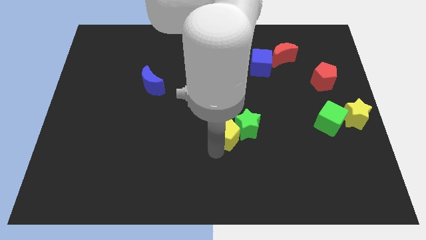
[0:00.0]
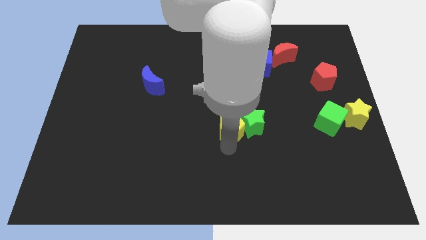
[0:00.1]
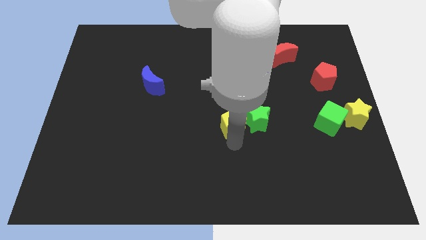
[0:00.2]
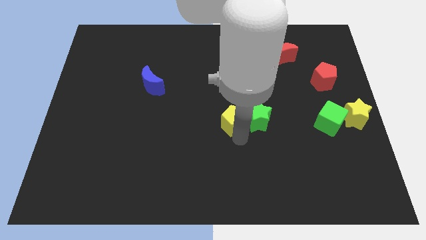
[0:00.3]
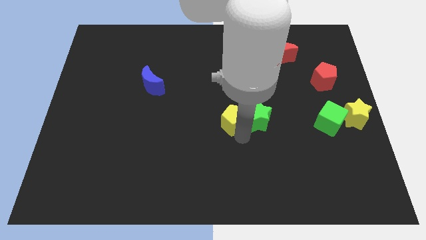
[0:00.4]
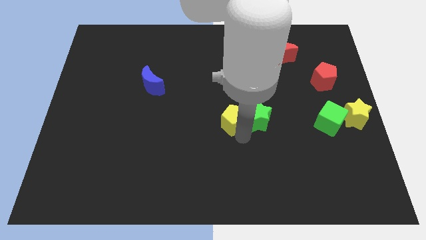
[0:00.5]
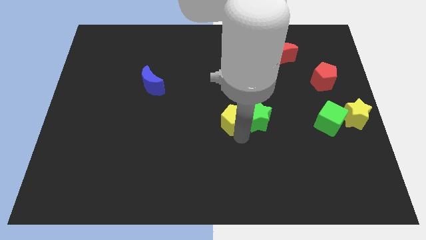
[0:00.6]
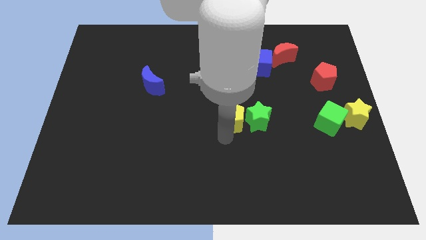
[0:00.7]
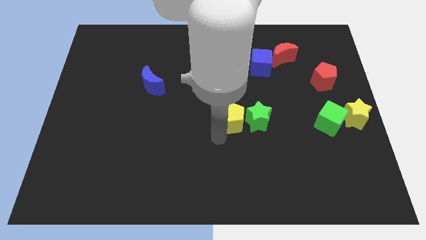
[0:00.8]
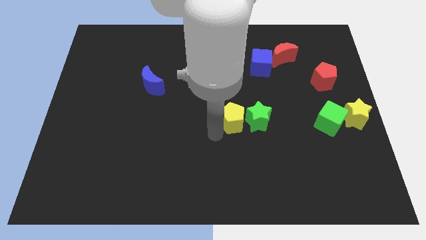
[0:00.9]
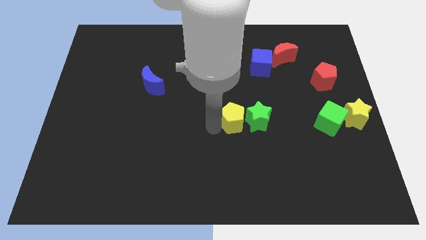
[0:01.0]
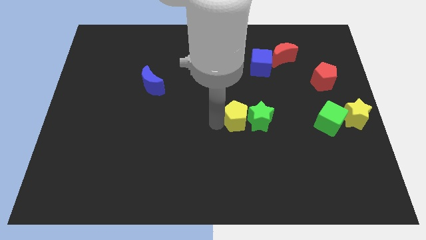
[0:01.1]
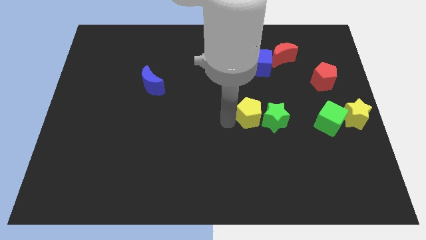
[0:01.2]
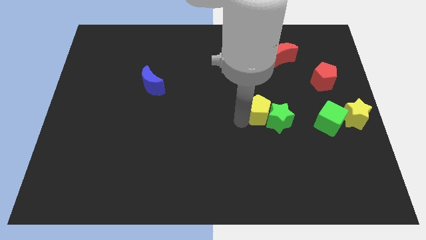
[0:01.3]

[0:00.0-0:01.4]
place the yellow pentagon and green star below the blue cube

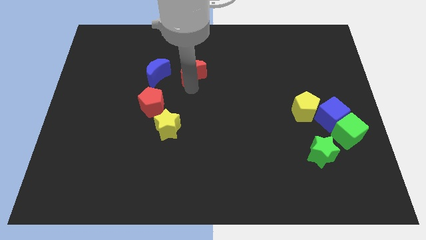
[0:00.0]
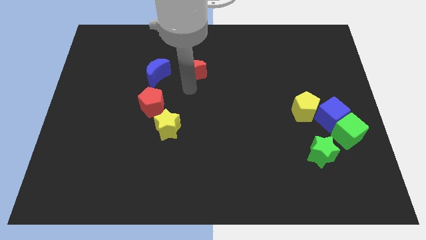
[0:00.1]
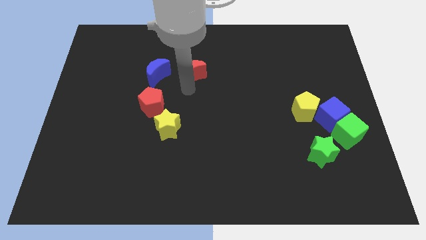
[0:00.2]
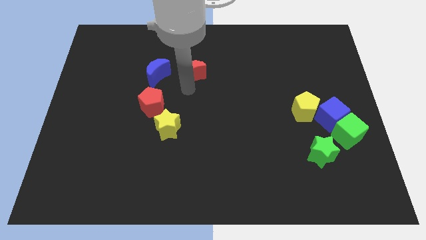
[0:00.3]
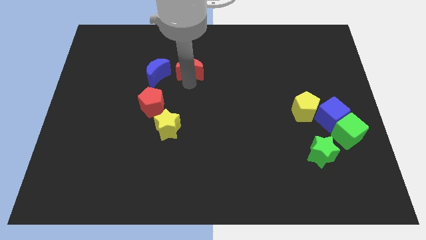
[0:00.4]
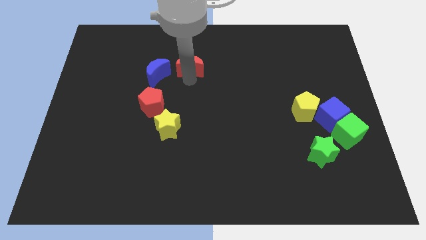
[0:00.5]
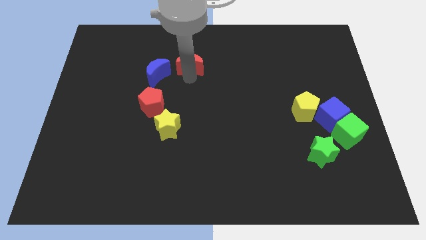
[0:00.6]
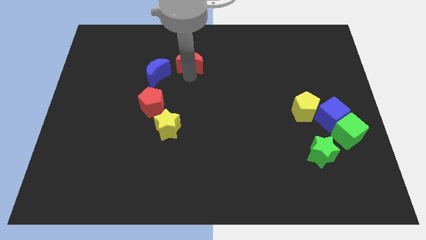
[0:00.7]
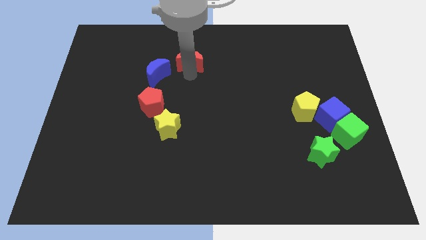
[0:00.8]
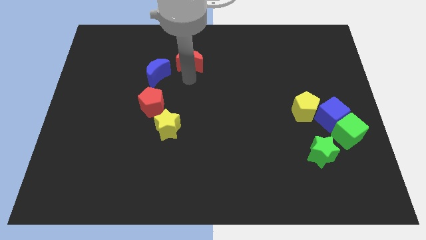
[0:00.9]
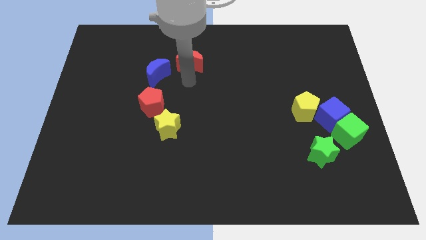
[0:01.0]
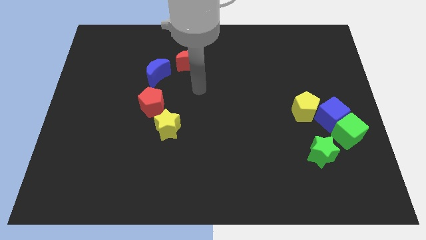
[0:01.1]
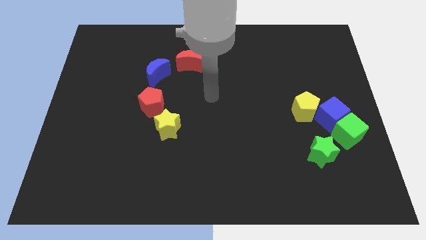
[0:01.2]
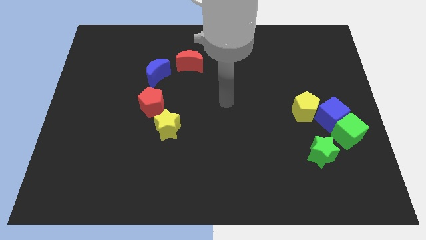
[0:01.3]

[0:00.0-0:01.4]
place the red crescent right to the blue crescent

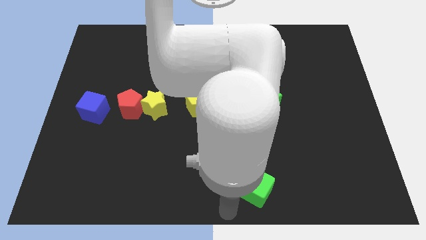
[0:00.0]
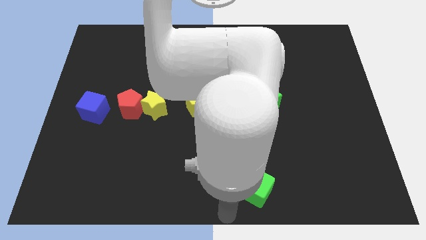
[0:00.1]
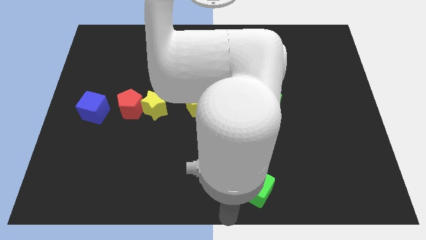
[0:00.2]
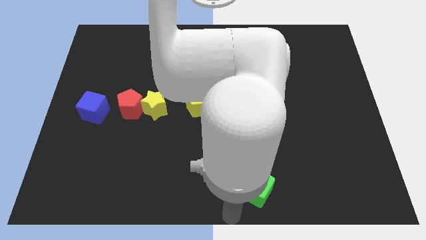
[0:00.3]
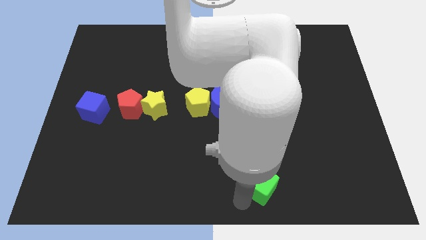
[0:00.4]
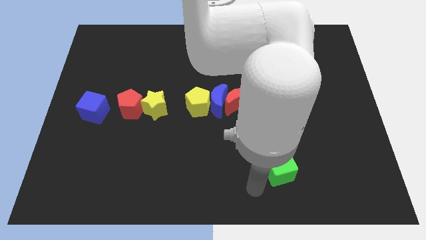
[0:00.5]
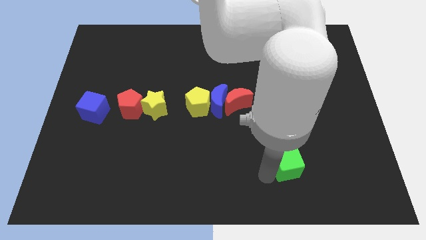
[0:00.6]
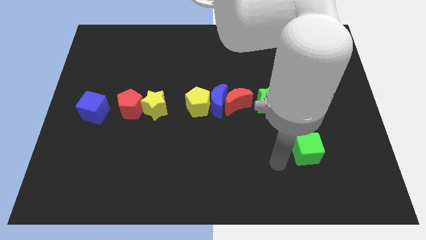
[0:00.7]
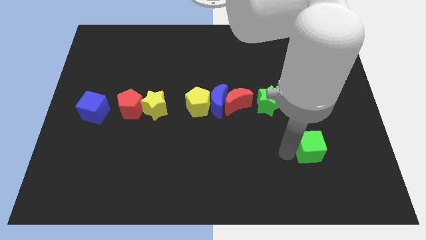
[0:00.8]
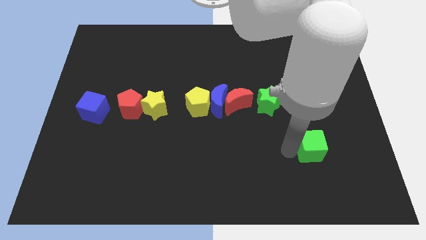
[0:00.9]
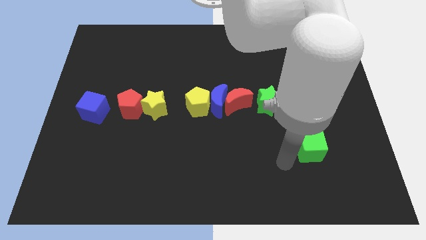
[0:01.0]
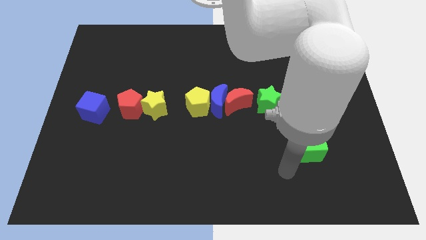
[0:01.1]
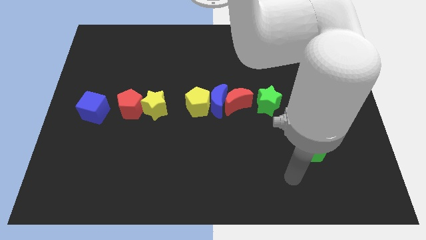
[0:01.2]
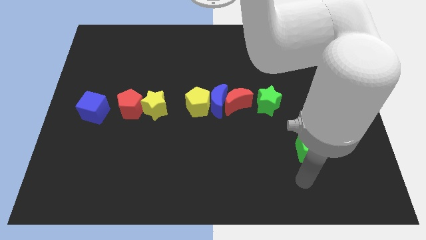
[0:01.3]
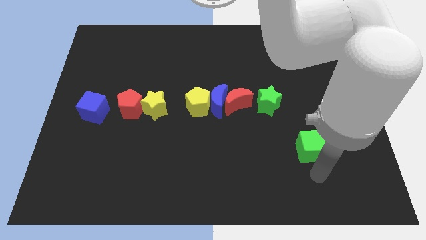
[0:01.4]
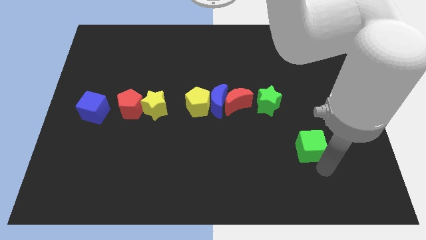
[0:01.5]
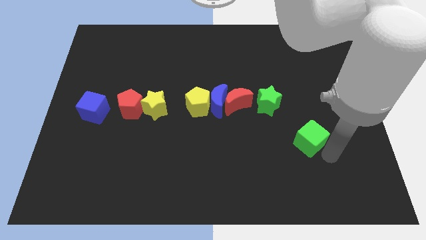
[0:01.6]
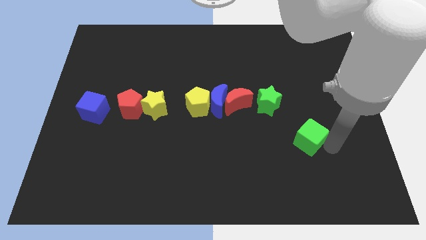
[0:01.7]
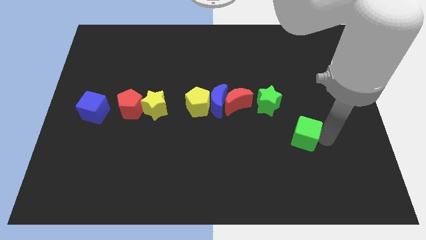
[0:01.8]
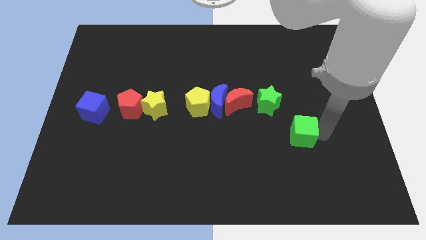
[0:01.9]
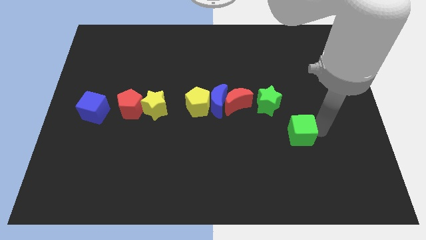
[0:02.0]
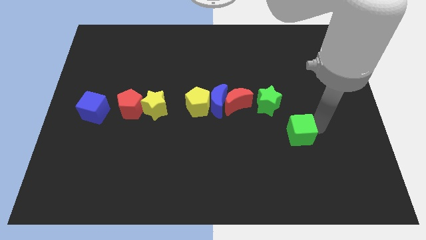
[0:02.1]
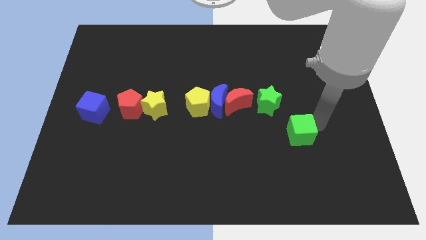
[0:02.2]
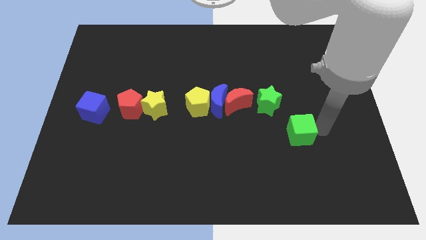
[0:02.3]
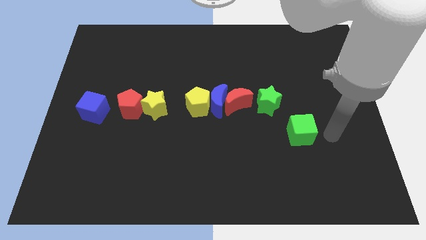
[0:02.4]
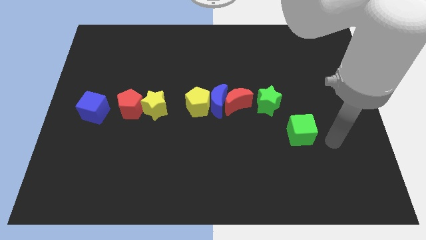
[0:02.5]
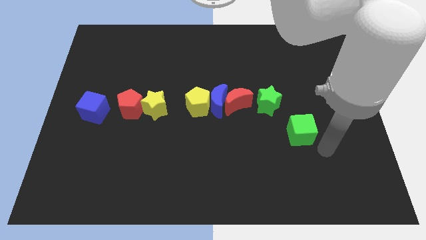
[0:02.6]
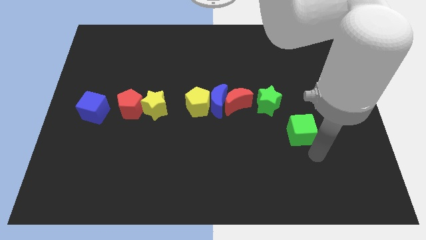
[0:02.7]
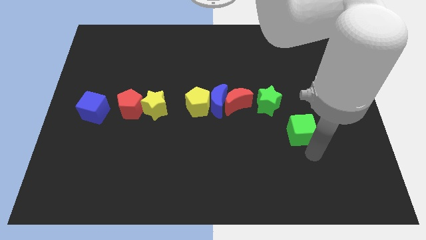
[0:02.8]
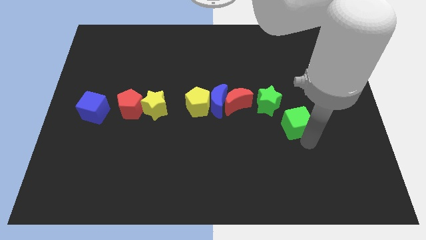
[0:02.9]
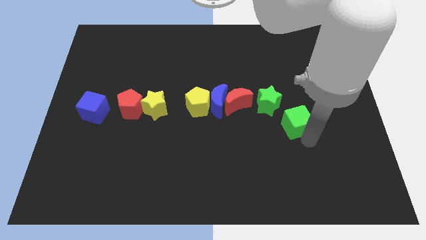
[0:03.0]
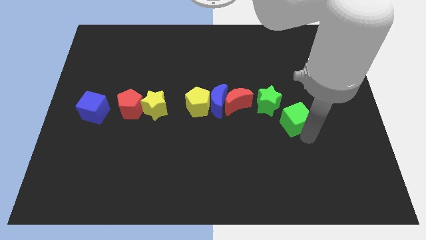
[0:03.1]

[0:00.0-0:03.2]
push the green cube from the bottom center

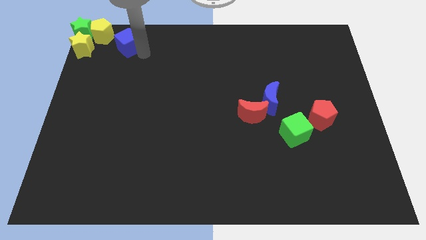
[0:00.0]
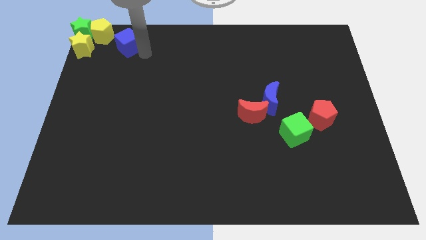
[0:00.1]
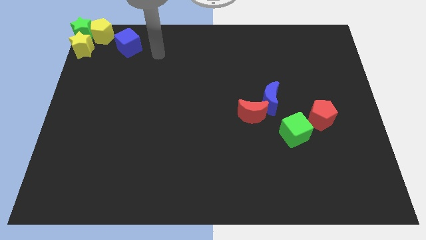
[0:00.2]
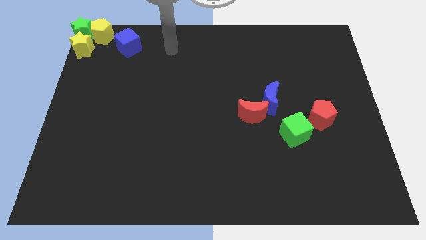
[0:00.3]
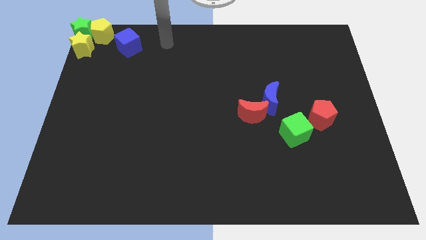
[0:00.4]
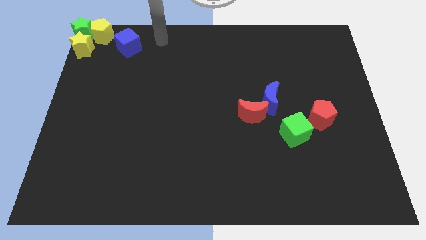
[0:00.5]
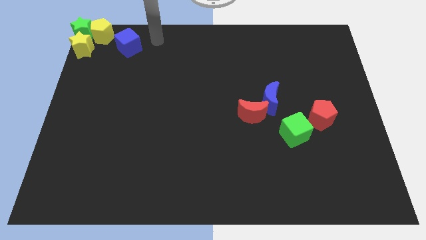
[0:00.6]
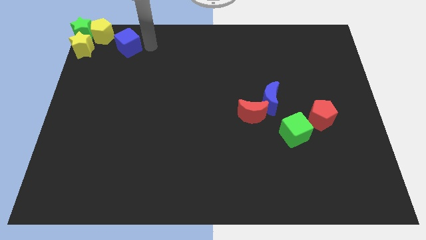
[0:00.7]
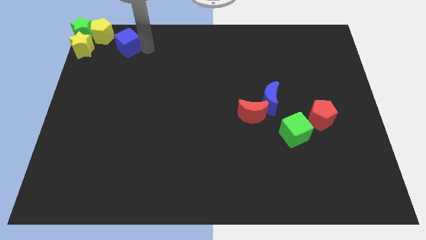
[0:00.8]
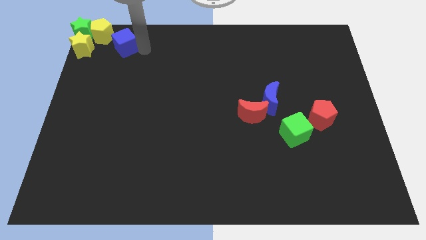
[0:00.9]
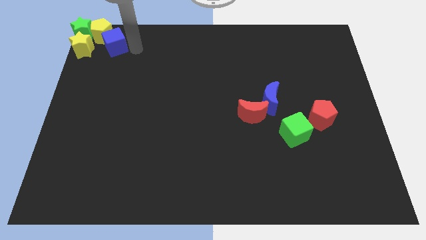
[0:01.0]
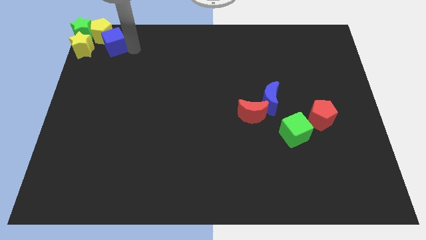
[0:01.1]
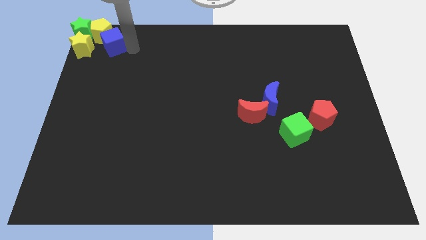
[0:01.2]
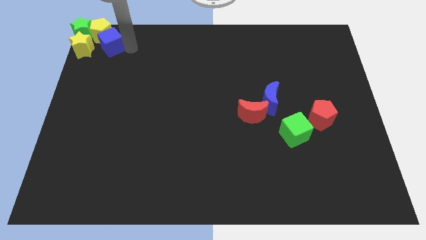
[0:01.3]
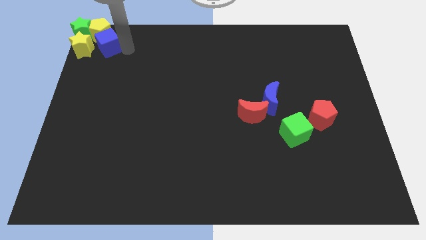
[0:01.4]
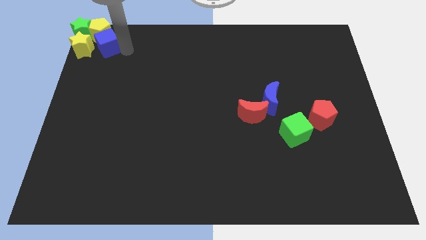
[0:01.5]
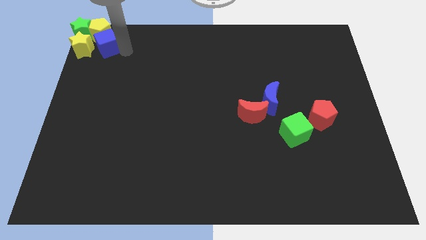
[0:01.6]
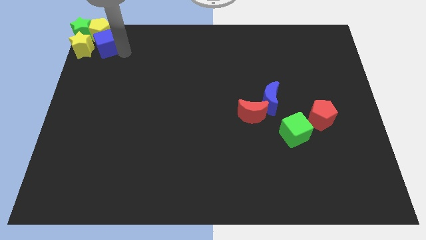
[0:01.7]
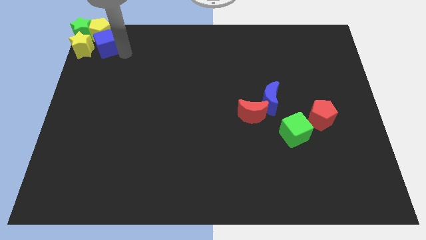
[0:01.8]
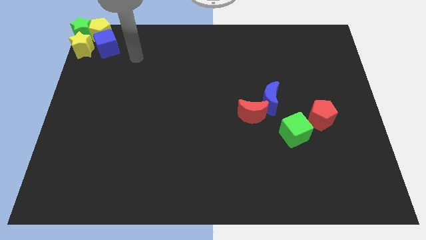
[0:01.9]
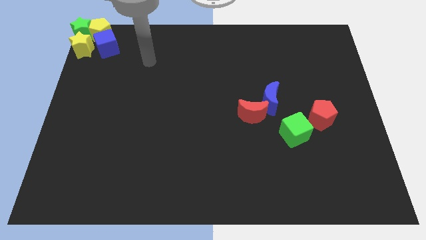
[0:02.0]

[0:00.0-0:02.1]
move blue cube to the right of yellow star

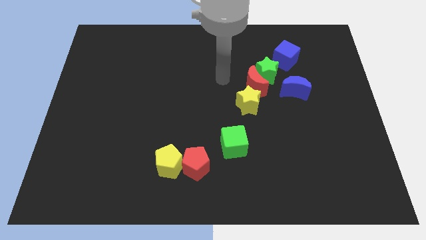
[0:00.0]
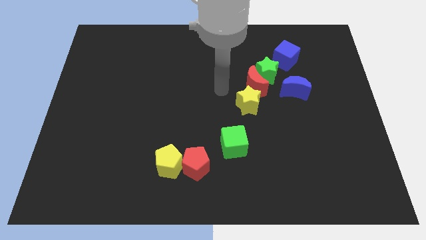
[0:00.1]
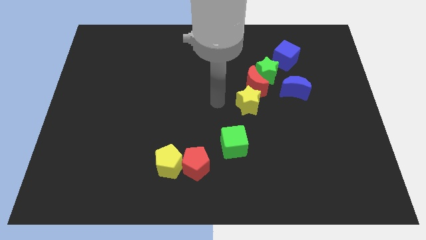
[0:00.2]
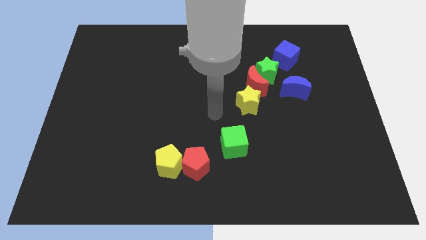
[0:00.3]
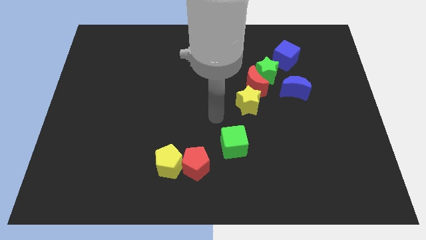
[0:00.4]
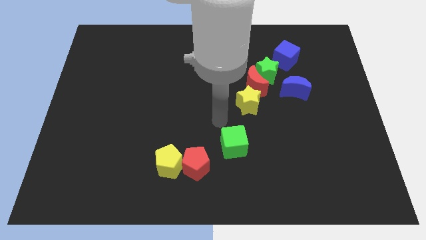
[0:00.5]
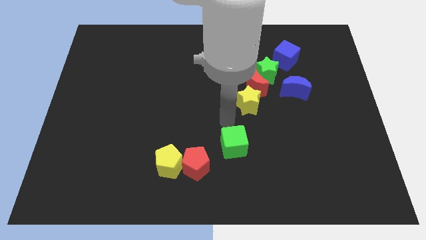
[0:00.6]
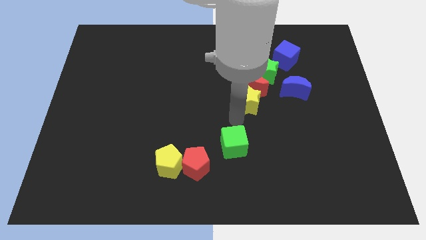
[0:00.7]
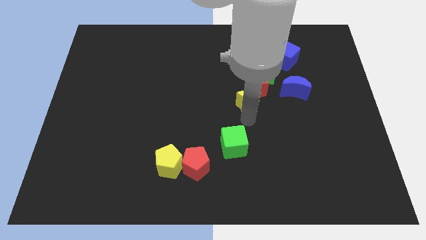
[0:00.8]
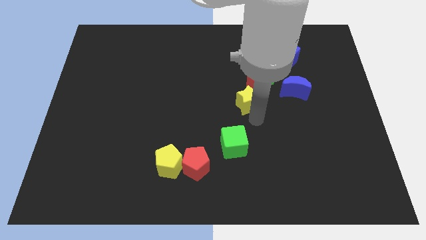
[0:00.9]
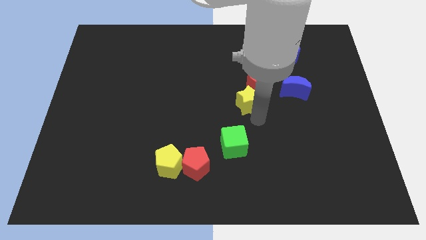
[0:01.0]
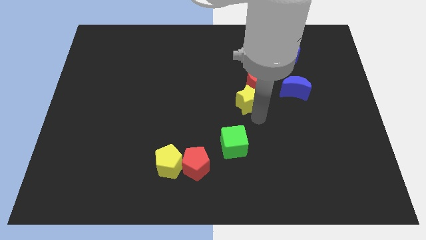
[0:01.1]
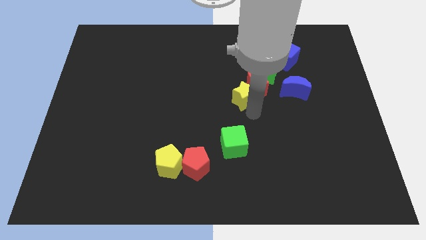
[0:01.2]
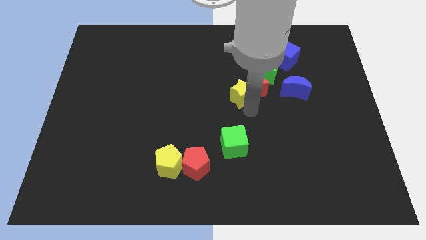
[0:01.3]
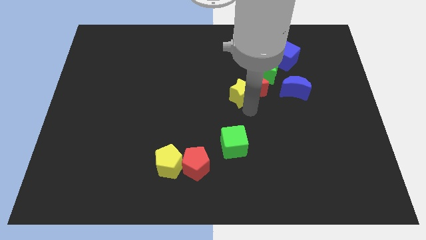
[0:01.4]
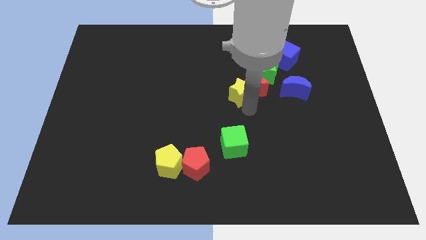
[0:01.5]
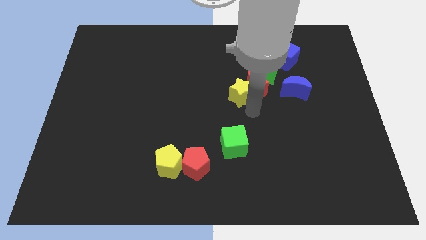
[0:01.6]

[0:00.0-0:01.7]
slide the yellow star to the bottom left side of the red crescent
